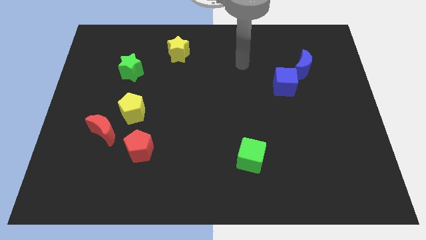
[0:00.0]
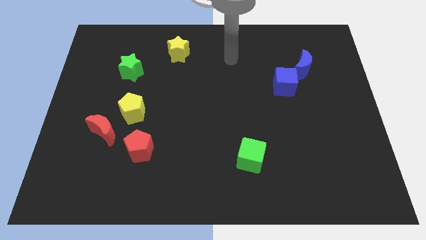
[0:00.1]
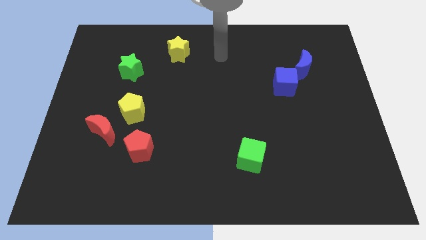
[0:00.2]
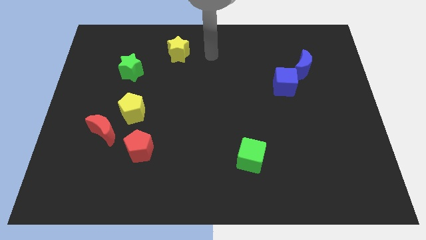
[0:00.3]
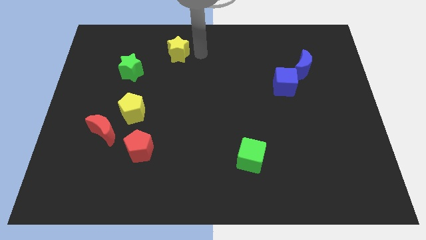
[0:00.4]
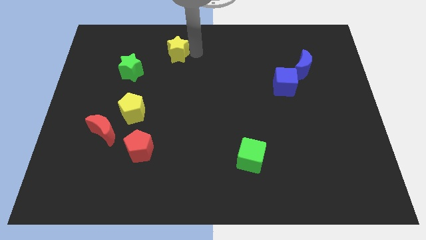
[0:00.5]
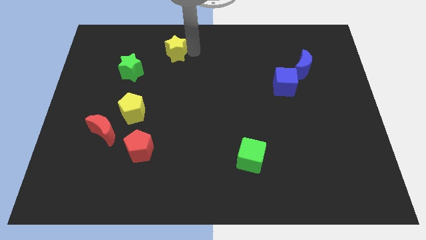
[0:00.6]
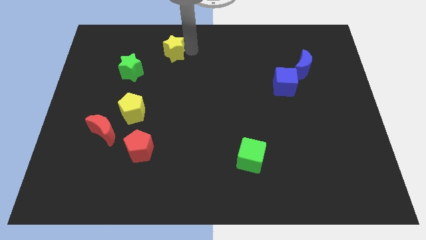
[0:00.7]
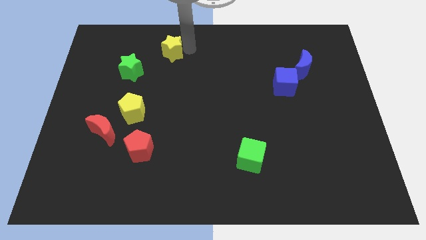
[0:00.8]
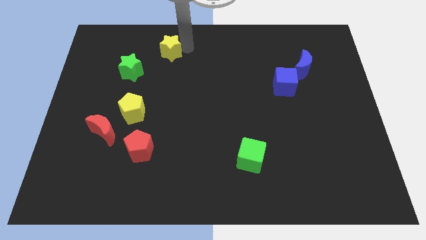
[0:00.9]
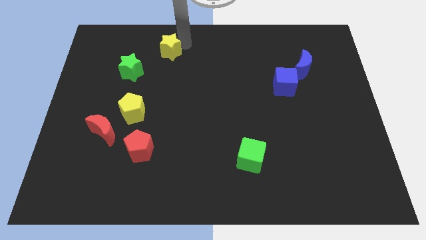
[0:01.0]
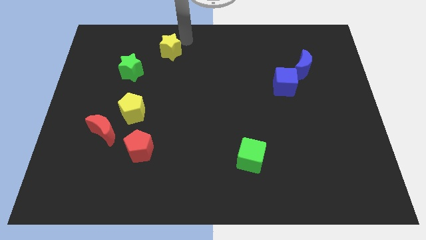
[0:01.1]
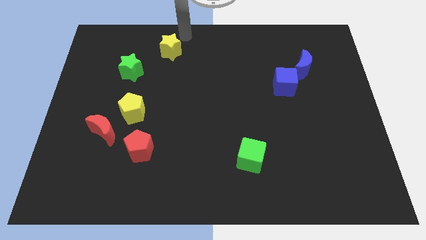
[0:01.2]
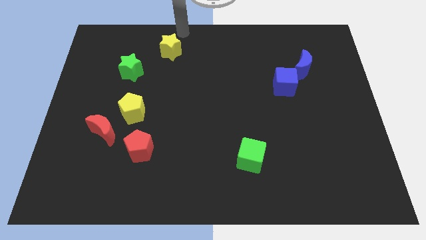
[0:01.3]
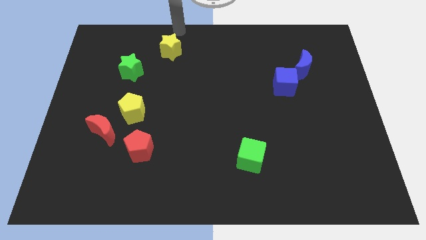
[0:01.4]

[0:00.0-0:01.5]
push the yellow star slightly left

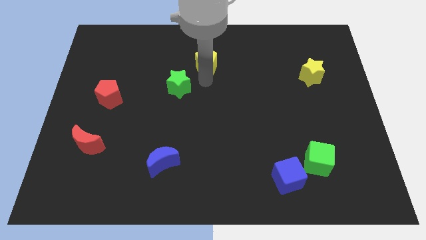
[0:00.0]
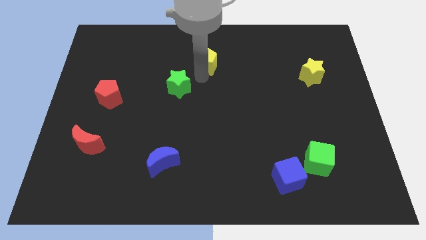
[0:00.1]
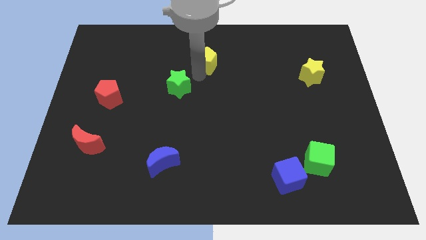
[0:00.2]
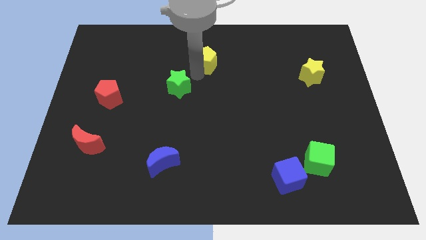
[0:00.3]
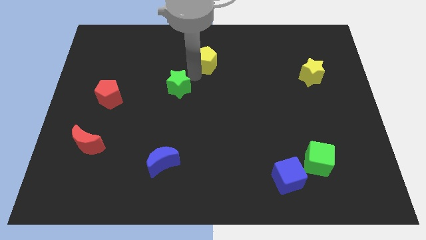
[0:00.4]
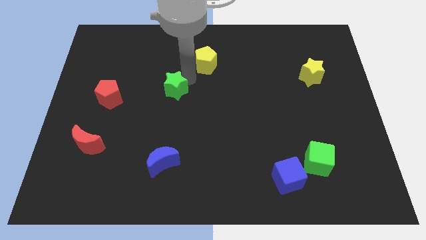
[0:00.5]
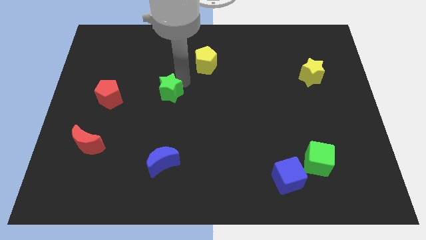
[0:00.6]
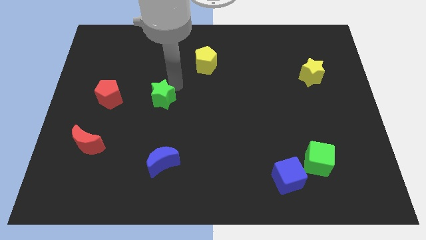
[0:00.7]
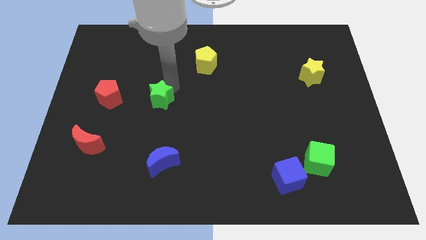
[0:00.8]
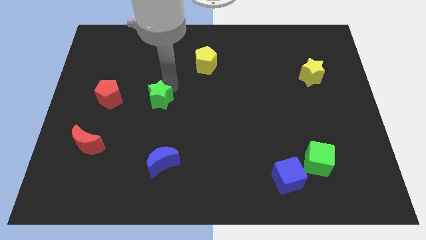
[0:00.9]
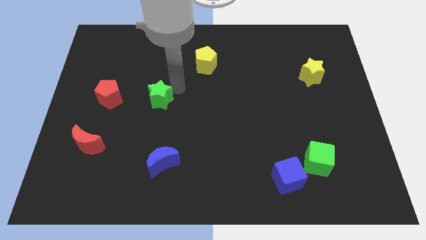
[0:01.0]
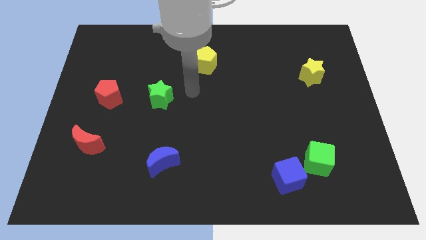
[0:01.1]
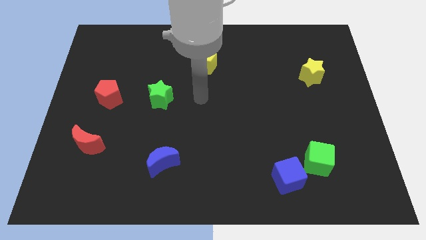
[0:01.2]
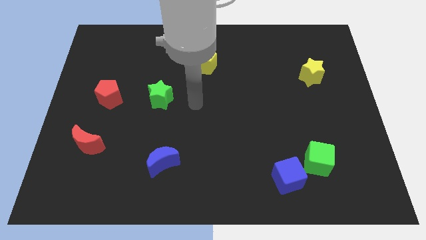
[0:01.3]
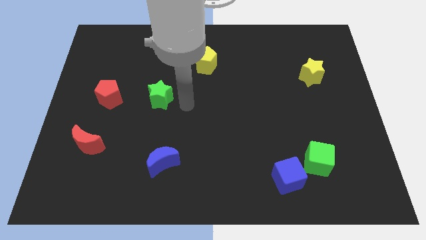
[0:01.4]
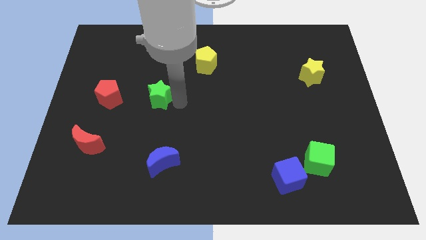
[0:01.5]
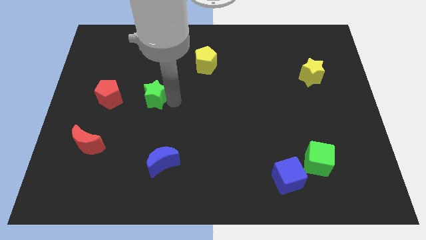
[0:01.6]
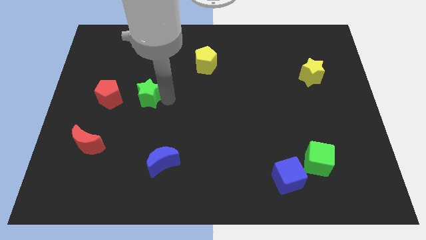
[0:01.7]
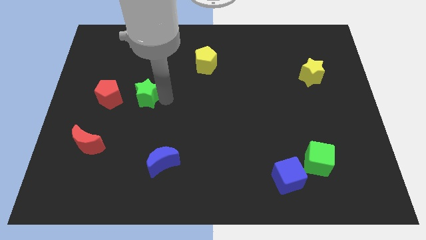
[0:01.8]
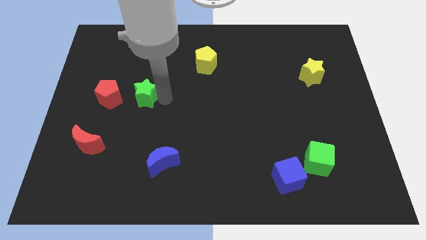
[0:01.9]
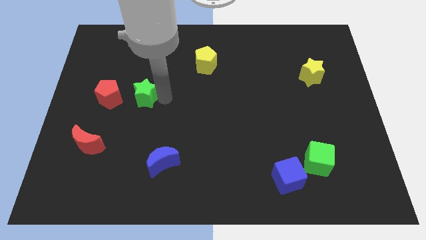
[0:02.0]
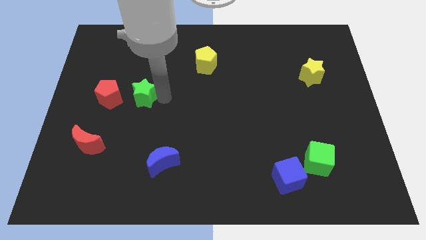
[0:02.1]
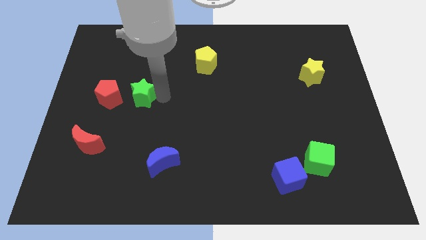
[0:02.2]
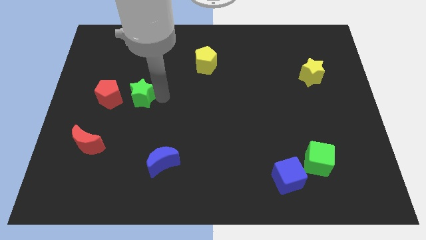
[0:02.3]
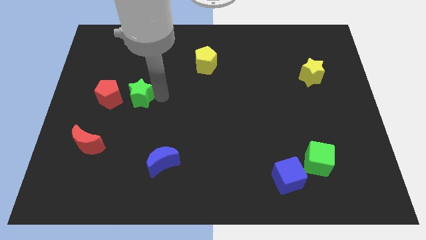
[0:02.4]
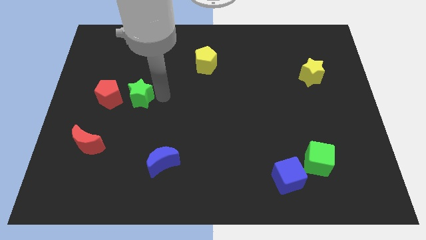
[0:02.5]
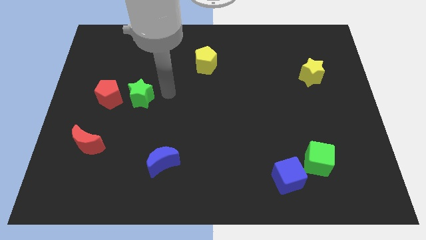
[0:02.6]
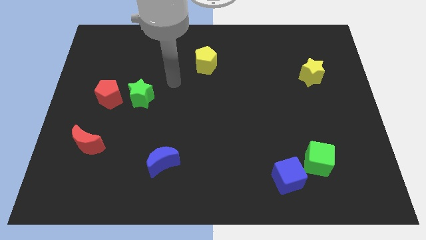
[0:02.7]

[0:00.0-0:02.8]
push the green star towards the right of the red pentagon

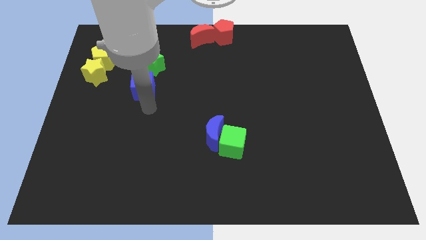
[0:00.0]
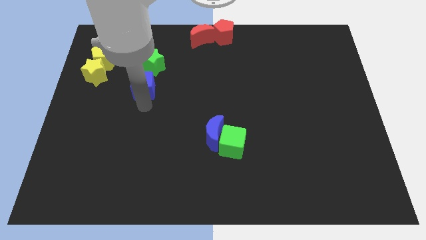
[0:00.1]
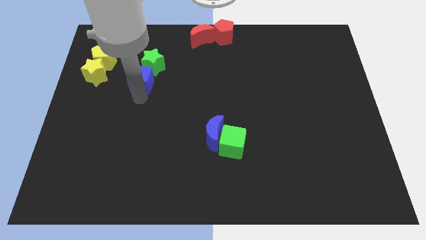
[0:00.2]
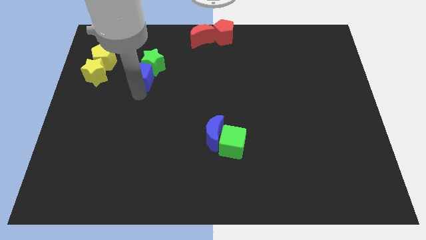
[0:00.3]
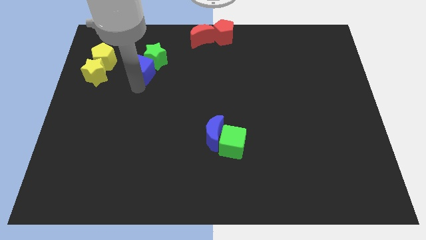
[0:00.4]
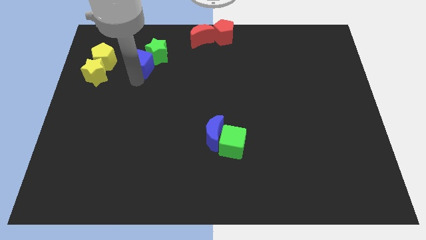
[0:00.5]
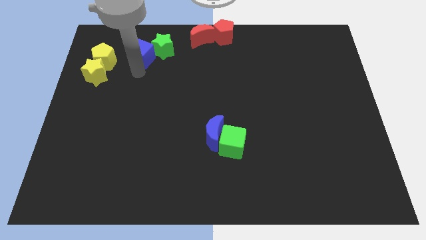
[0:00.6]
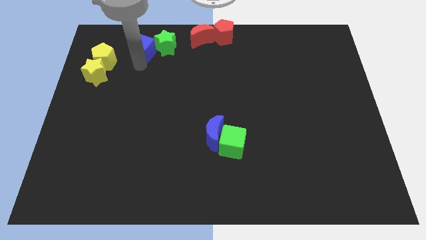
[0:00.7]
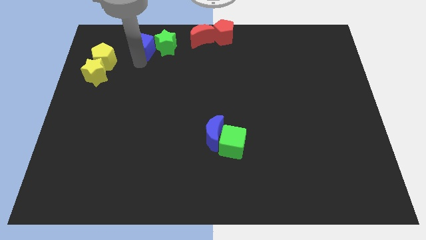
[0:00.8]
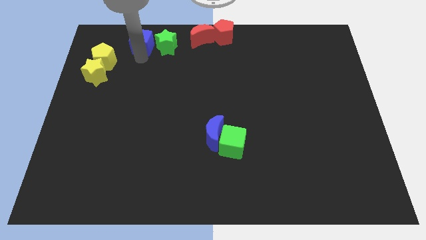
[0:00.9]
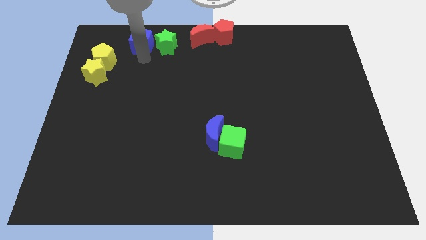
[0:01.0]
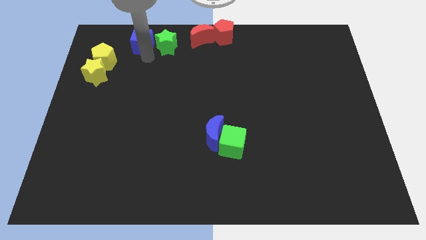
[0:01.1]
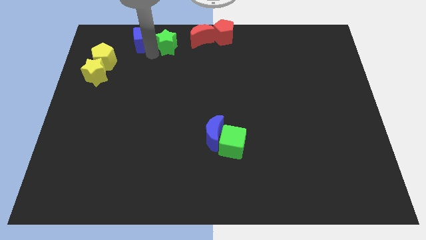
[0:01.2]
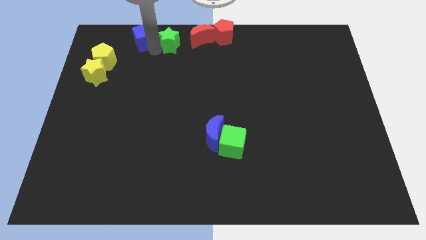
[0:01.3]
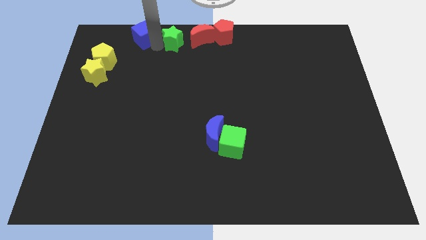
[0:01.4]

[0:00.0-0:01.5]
push the blue cube to the left of the green star

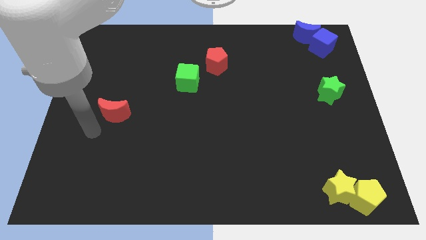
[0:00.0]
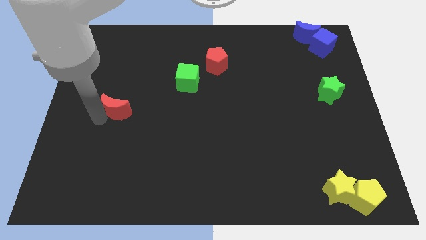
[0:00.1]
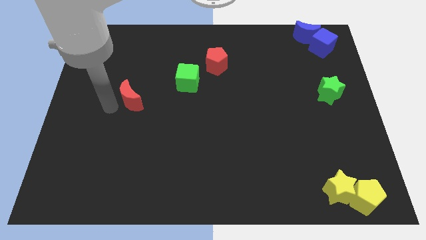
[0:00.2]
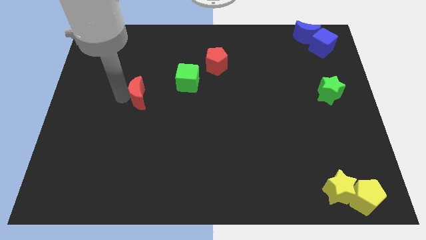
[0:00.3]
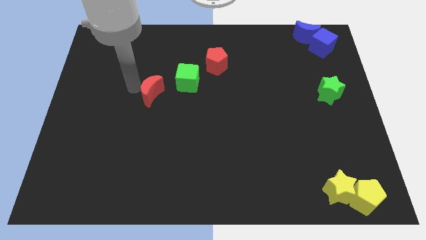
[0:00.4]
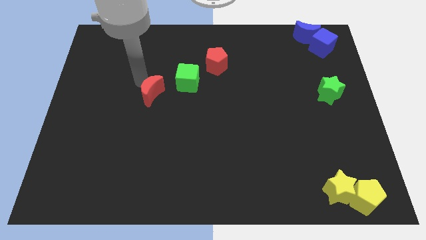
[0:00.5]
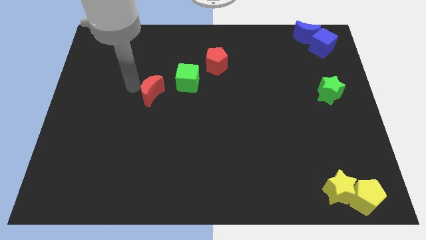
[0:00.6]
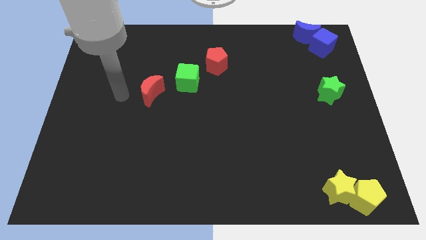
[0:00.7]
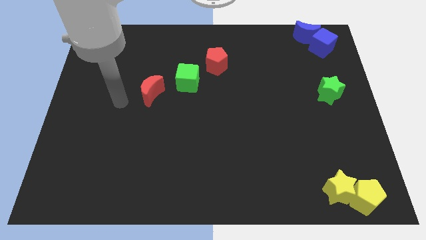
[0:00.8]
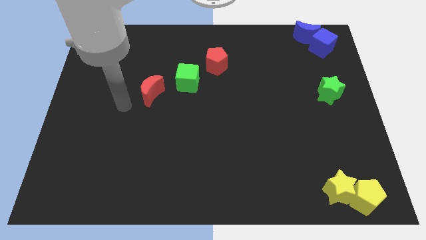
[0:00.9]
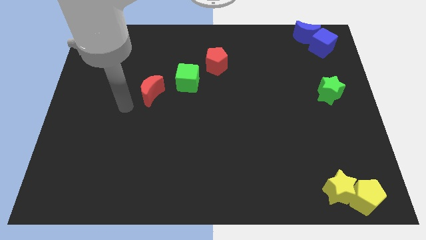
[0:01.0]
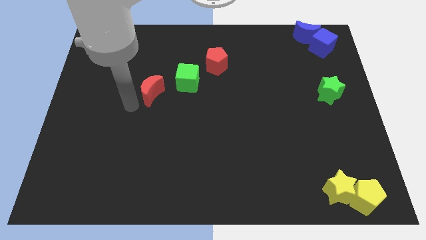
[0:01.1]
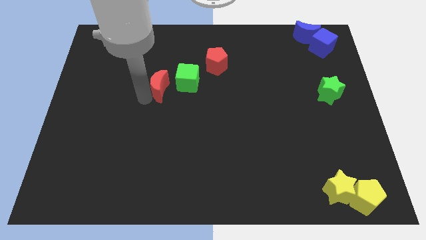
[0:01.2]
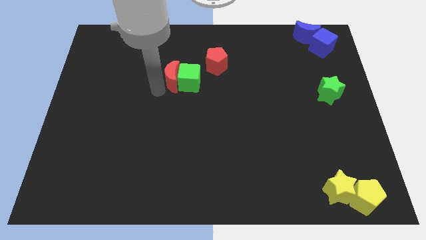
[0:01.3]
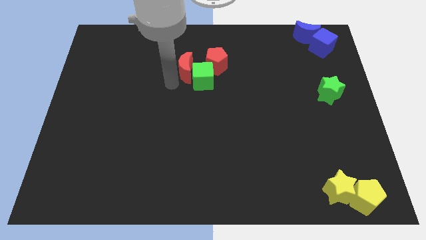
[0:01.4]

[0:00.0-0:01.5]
slide the red moon into the green cube

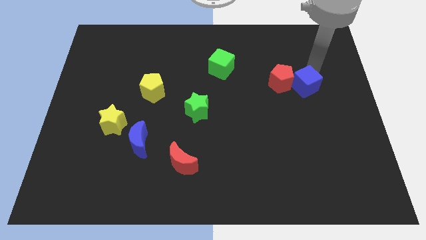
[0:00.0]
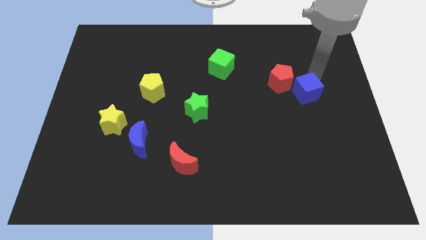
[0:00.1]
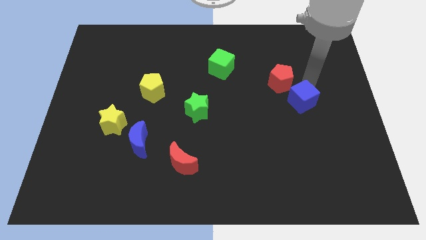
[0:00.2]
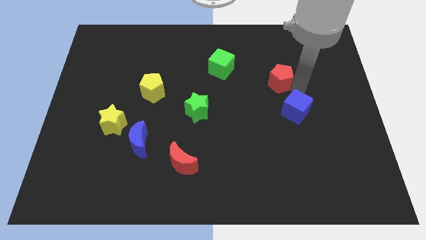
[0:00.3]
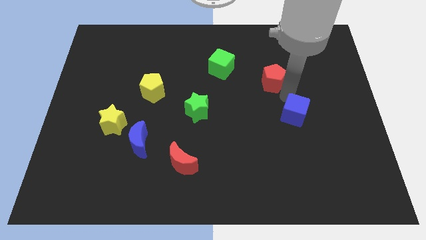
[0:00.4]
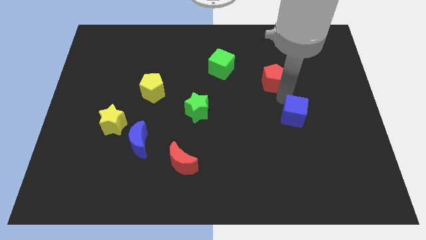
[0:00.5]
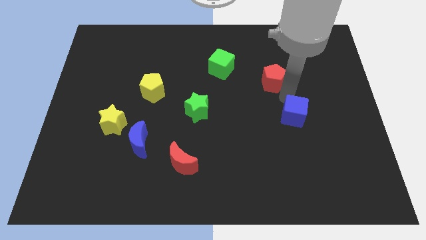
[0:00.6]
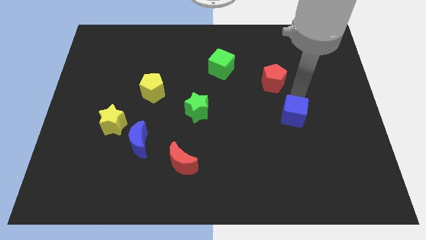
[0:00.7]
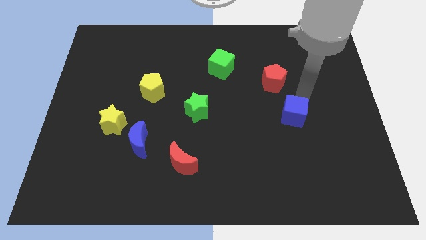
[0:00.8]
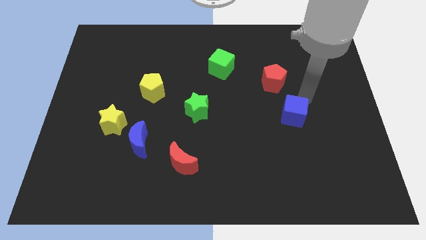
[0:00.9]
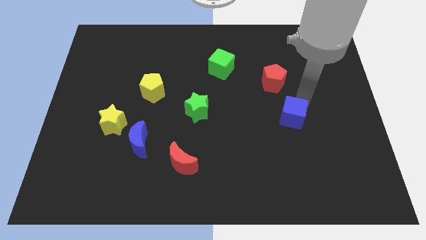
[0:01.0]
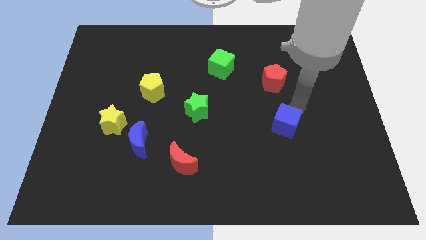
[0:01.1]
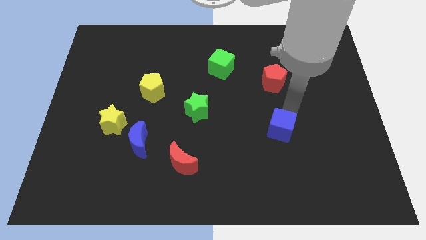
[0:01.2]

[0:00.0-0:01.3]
separate the blue cube from the red pentagon

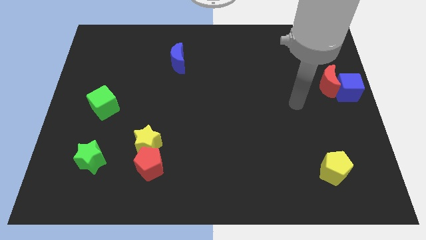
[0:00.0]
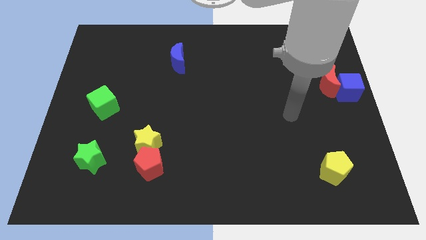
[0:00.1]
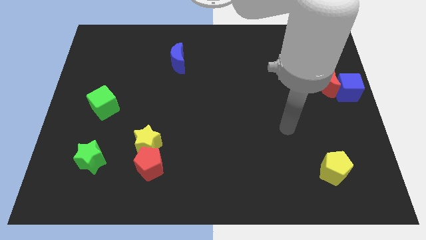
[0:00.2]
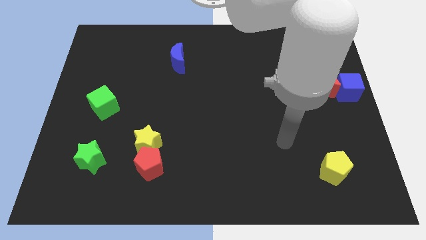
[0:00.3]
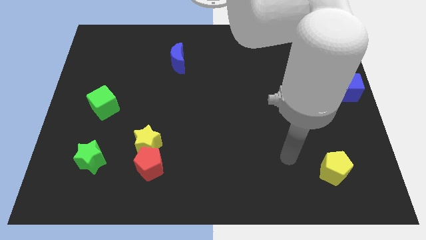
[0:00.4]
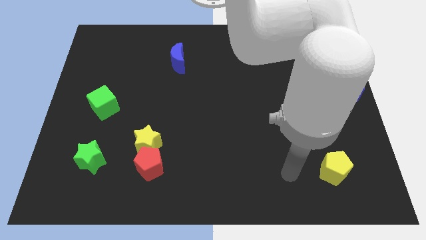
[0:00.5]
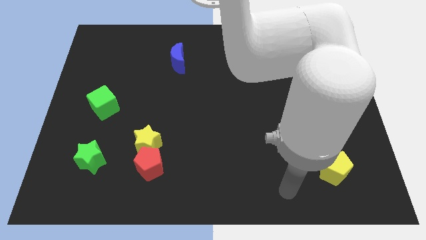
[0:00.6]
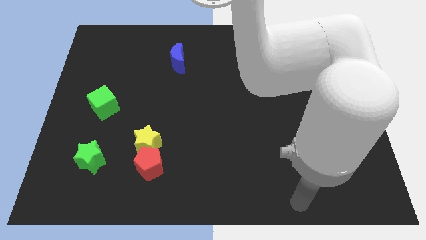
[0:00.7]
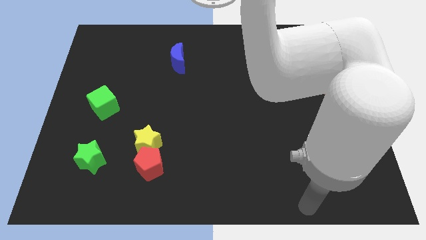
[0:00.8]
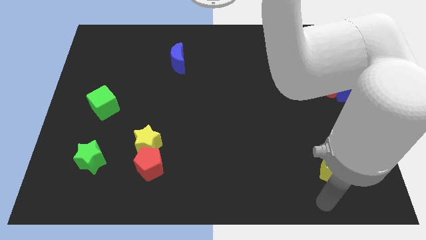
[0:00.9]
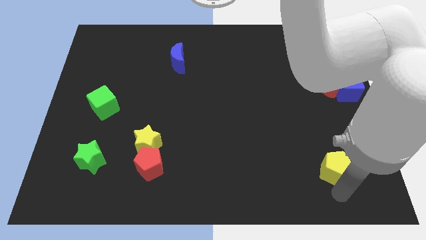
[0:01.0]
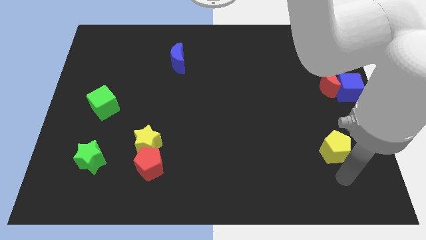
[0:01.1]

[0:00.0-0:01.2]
move arm below yellow pentagon
